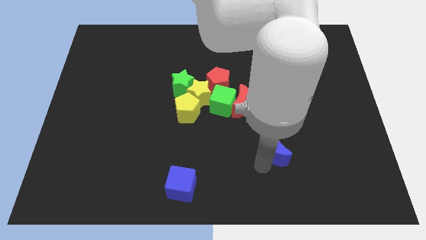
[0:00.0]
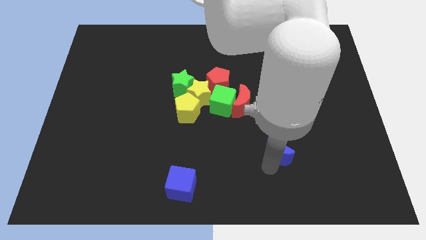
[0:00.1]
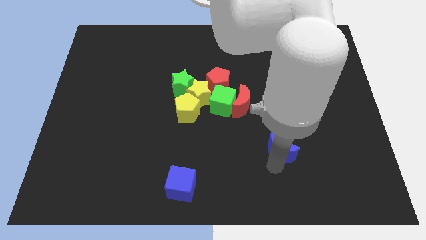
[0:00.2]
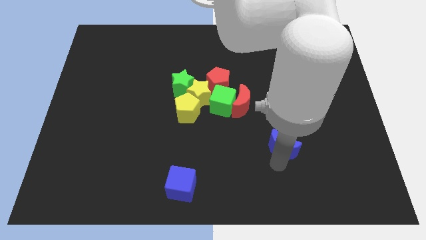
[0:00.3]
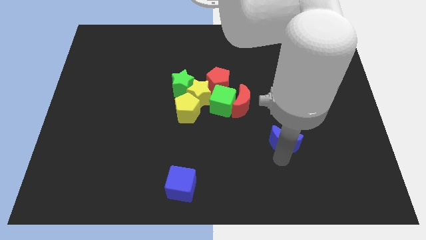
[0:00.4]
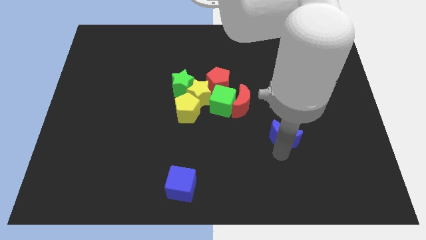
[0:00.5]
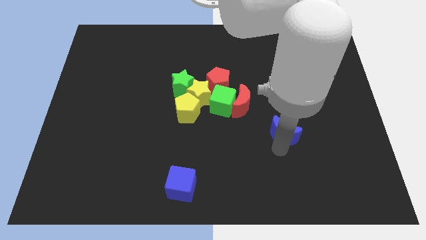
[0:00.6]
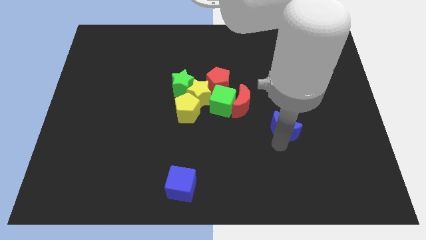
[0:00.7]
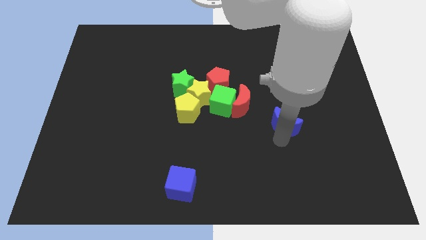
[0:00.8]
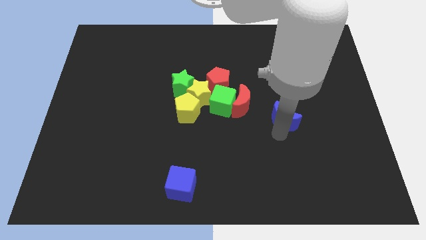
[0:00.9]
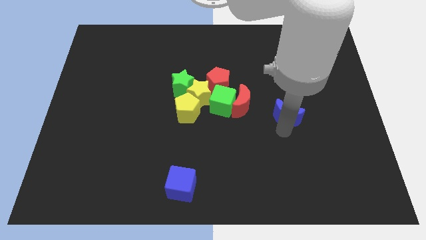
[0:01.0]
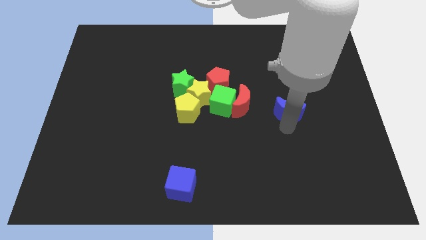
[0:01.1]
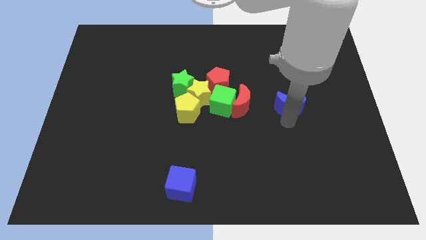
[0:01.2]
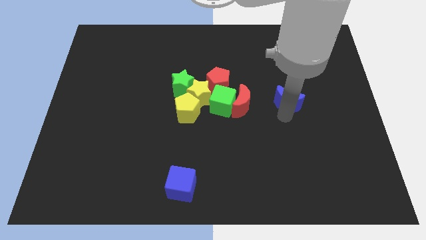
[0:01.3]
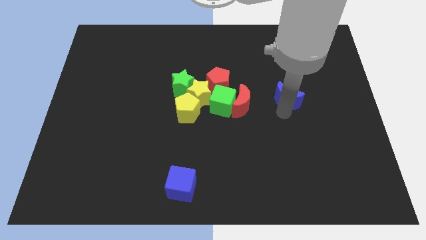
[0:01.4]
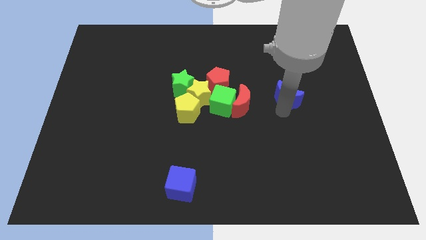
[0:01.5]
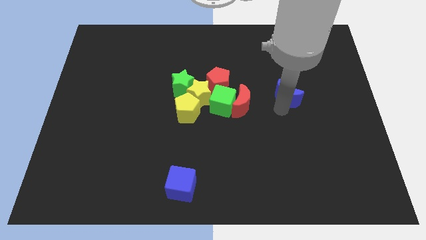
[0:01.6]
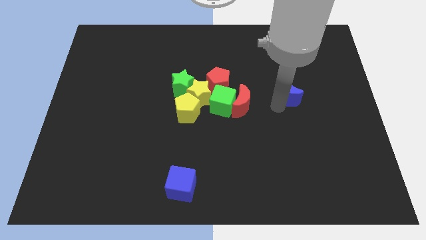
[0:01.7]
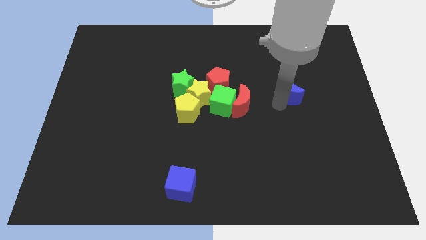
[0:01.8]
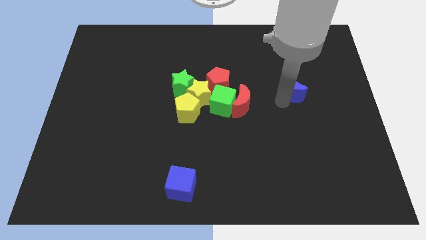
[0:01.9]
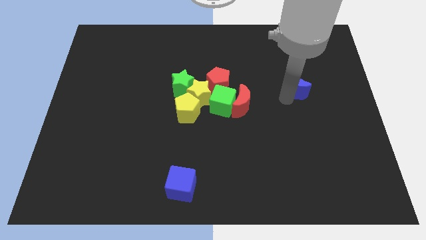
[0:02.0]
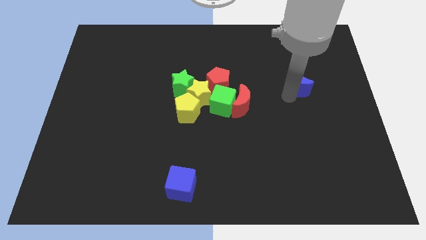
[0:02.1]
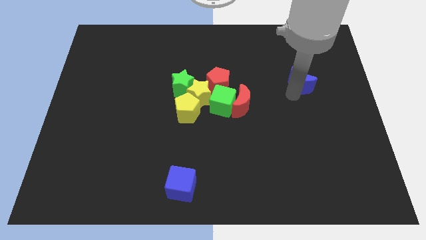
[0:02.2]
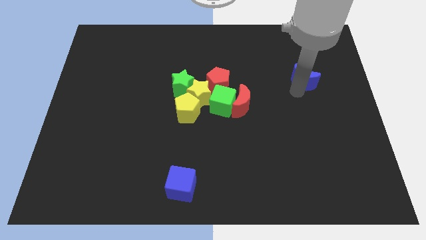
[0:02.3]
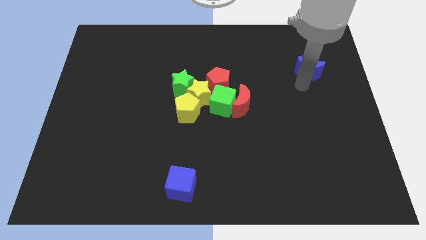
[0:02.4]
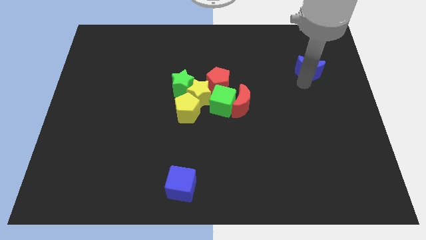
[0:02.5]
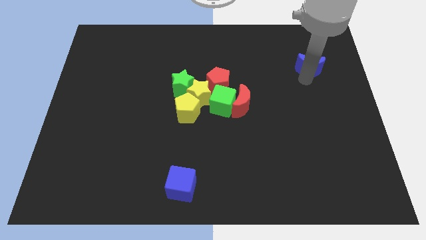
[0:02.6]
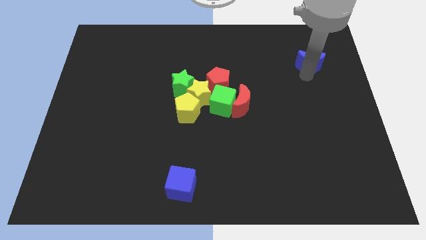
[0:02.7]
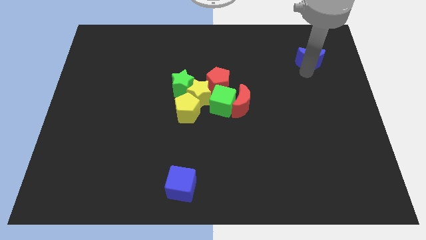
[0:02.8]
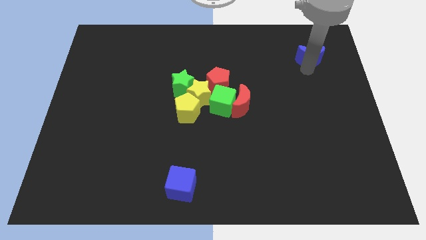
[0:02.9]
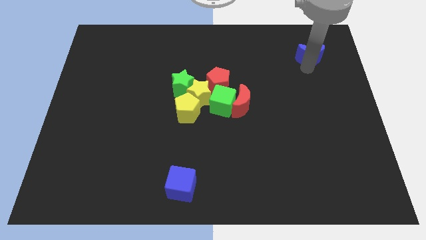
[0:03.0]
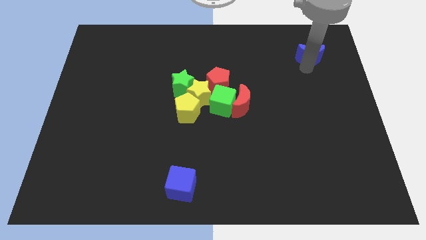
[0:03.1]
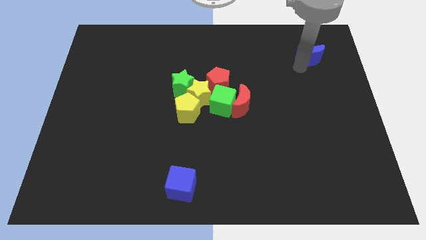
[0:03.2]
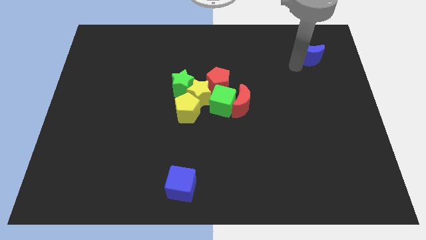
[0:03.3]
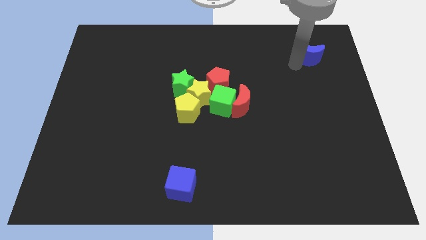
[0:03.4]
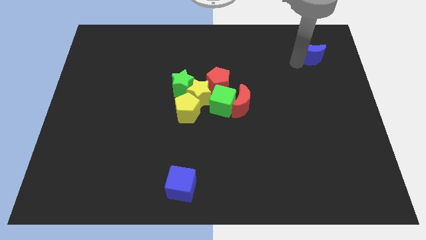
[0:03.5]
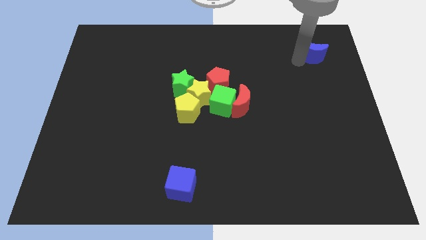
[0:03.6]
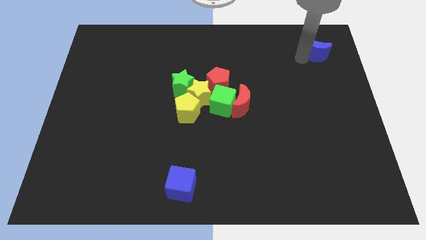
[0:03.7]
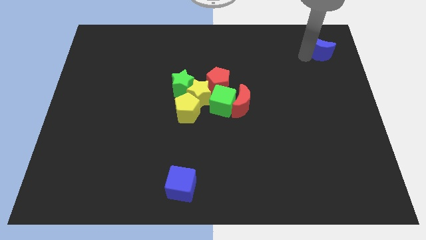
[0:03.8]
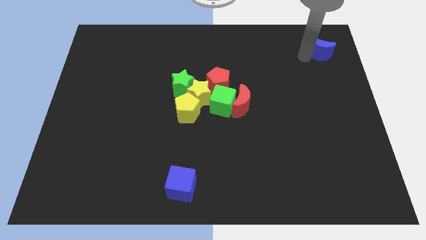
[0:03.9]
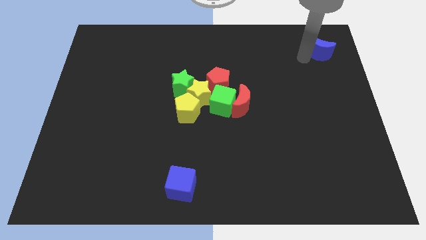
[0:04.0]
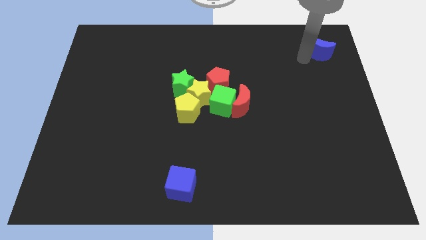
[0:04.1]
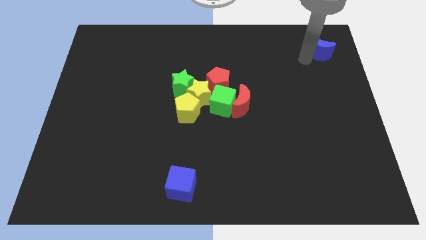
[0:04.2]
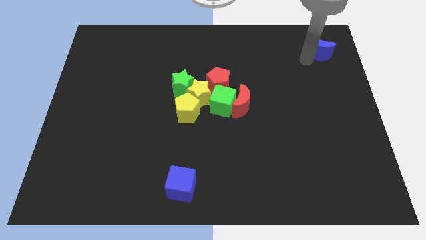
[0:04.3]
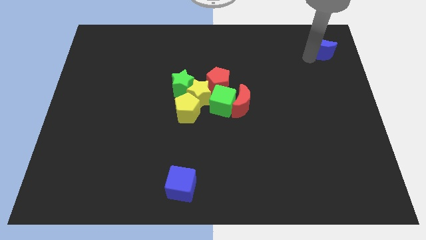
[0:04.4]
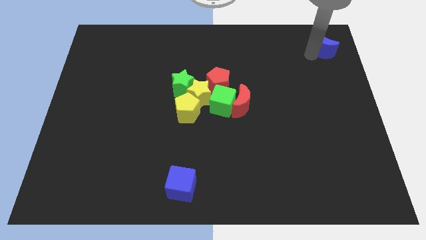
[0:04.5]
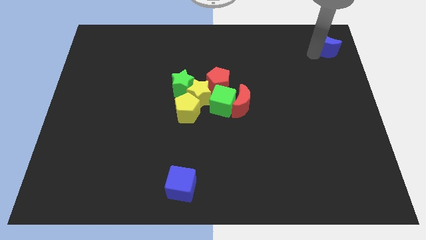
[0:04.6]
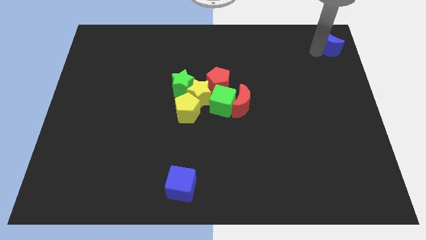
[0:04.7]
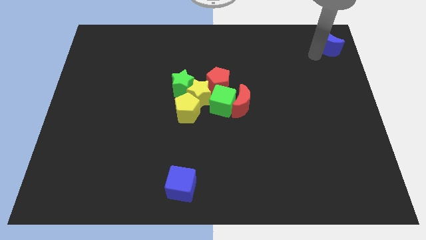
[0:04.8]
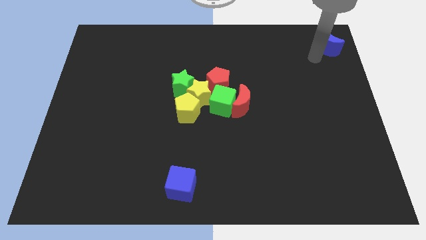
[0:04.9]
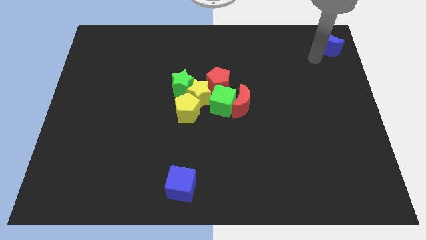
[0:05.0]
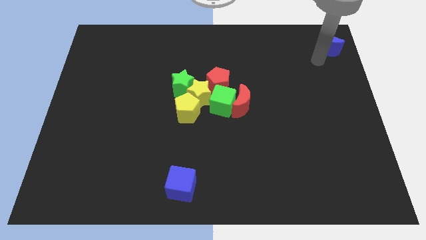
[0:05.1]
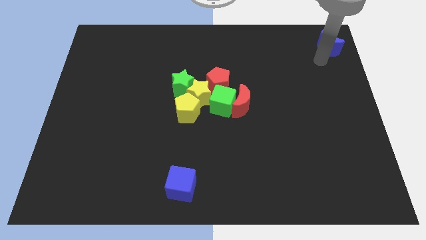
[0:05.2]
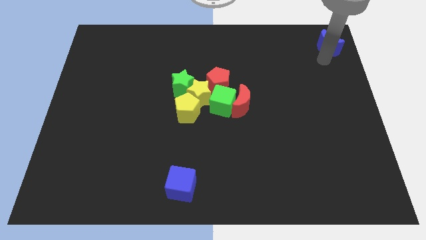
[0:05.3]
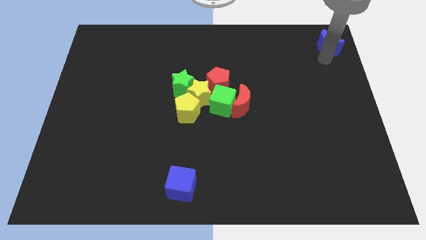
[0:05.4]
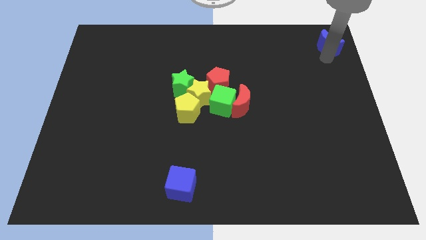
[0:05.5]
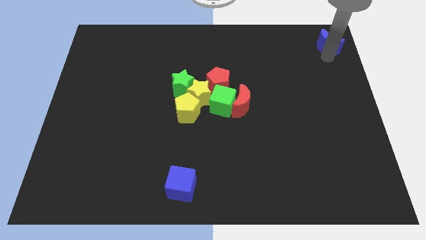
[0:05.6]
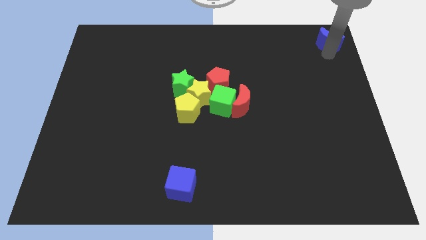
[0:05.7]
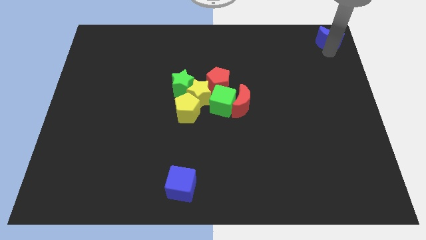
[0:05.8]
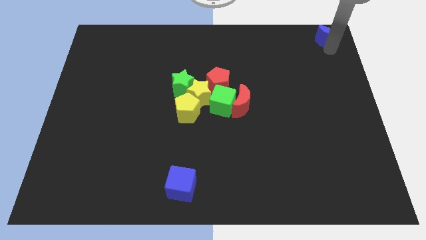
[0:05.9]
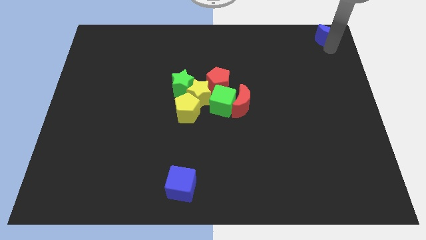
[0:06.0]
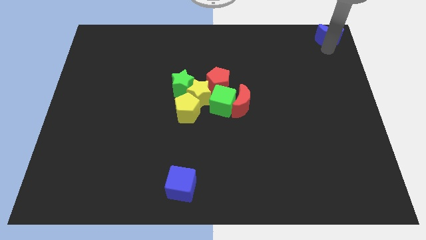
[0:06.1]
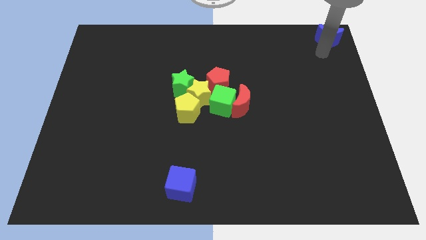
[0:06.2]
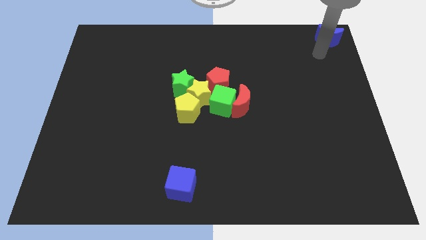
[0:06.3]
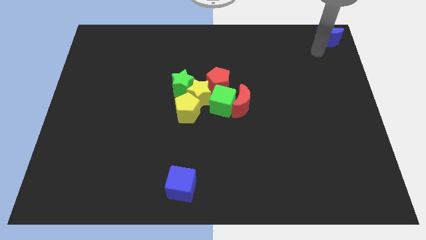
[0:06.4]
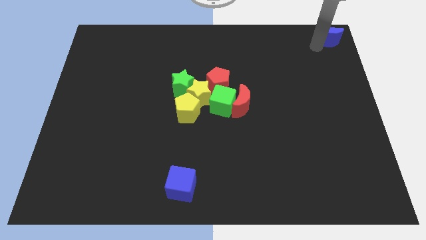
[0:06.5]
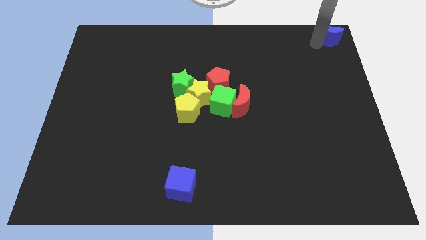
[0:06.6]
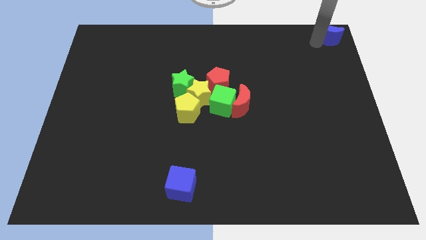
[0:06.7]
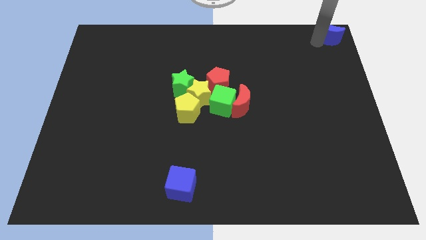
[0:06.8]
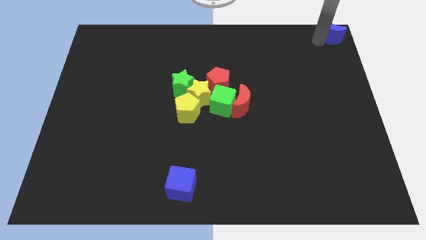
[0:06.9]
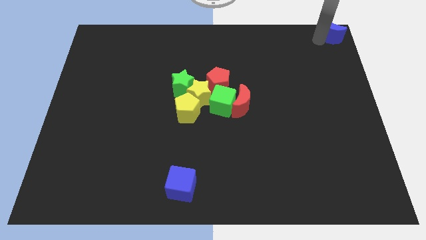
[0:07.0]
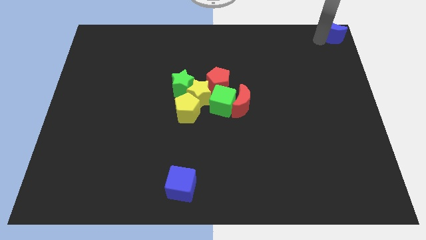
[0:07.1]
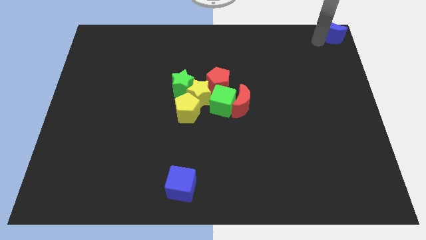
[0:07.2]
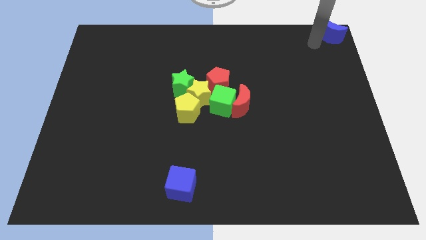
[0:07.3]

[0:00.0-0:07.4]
push the blue crescent towards the top right of the board

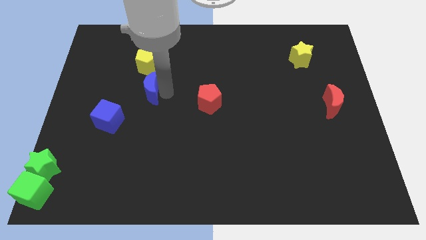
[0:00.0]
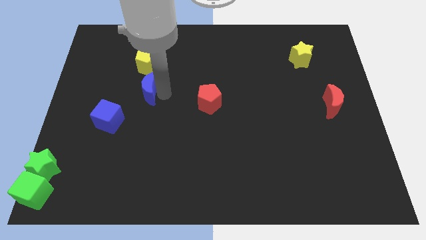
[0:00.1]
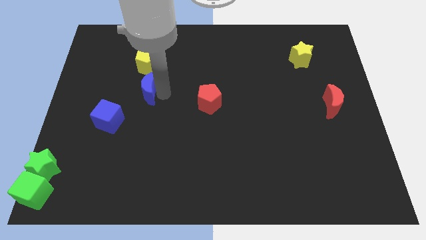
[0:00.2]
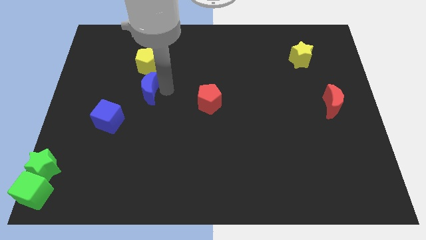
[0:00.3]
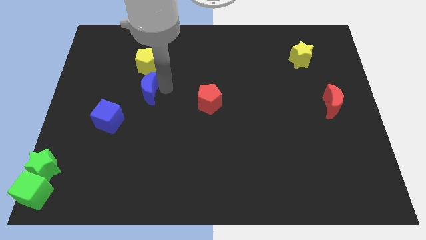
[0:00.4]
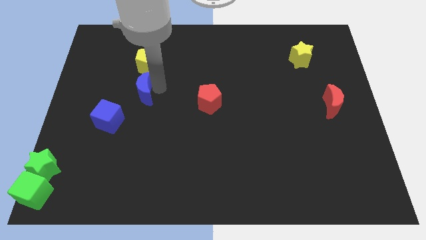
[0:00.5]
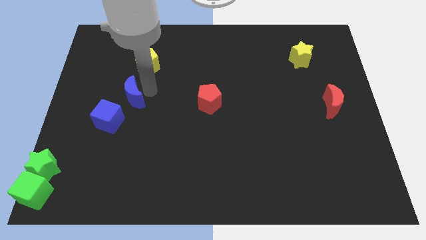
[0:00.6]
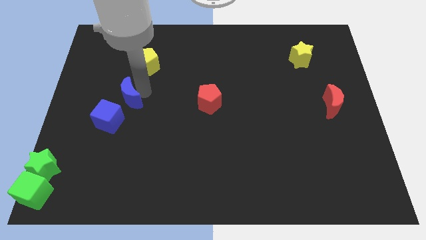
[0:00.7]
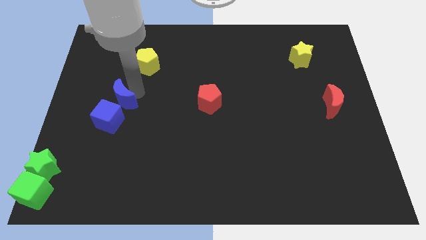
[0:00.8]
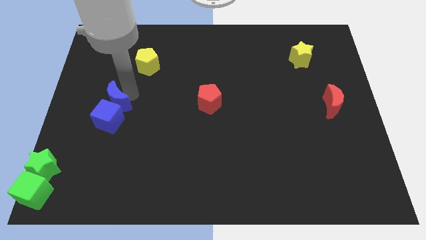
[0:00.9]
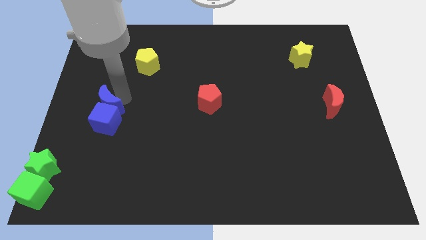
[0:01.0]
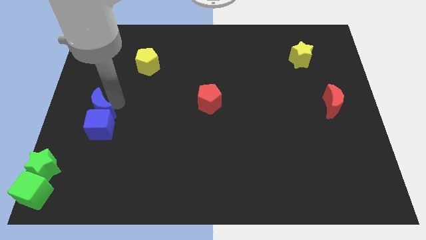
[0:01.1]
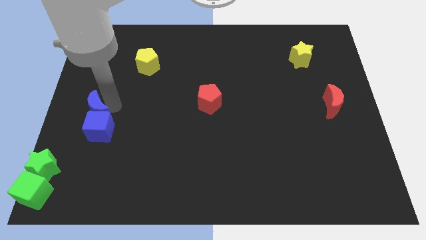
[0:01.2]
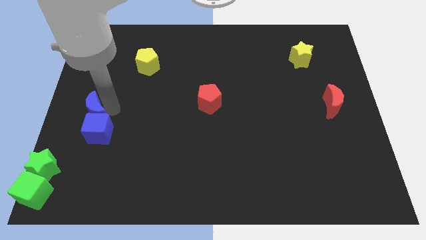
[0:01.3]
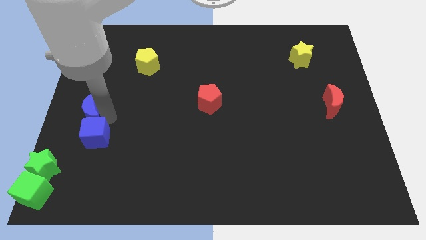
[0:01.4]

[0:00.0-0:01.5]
place the blue crescent above the blue cube
